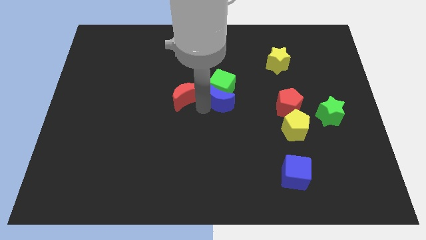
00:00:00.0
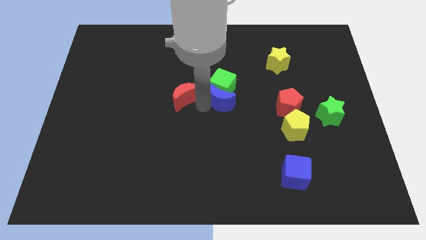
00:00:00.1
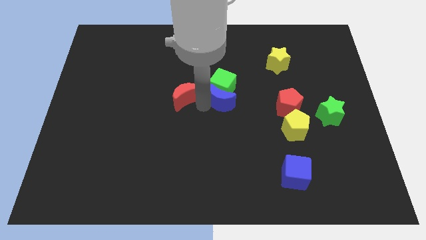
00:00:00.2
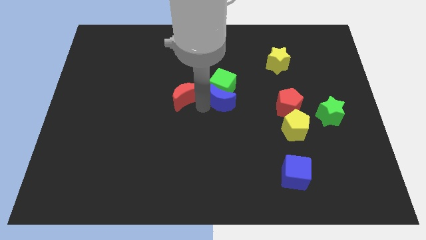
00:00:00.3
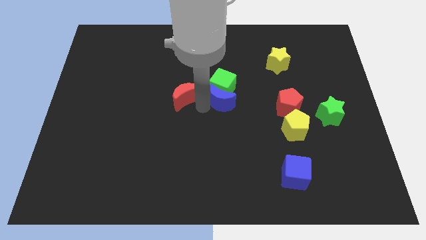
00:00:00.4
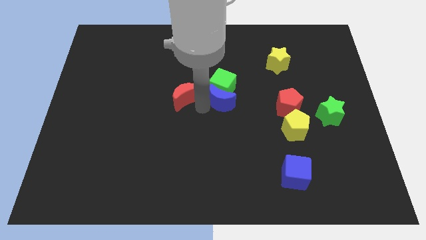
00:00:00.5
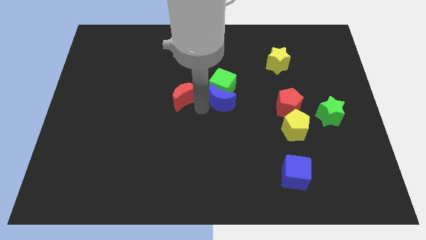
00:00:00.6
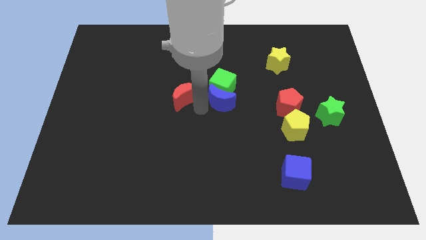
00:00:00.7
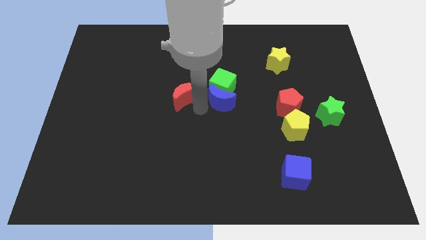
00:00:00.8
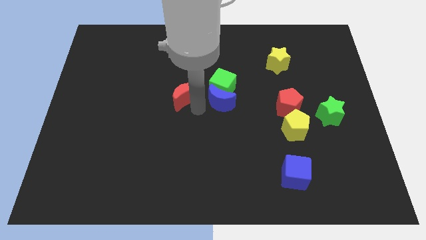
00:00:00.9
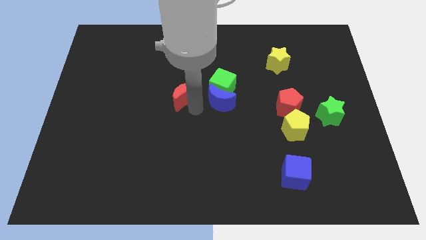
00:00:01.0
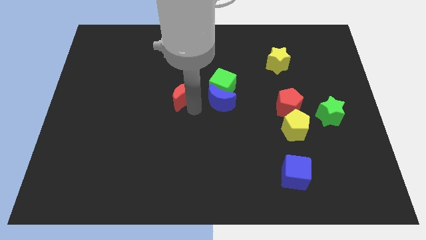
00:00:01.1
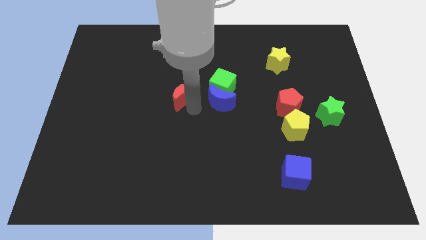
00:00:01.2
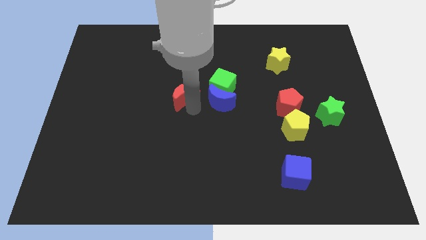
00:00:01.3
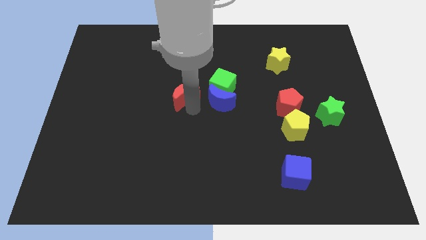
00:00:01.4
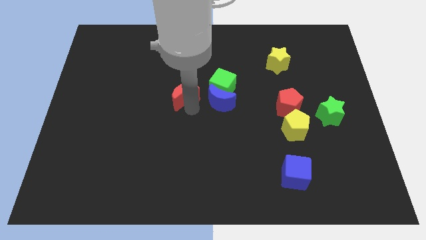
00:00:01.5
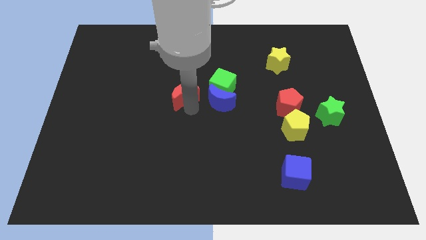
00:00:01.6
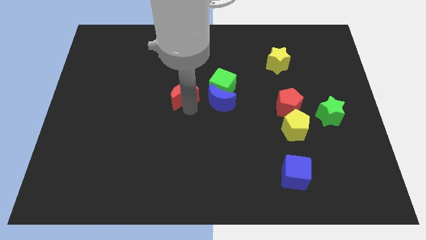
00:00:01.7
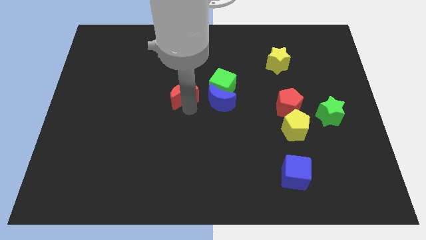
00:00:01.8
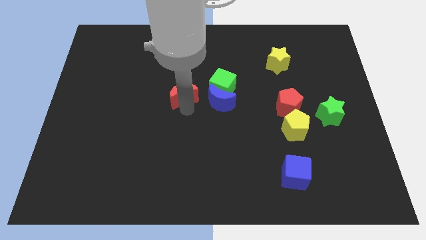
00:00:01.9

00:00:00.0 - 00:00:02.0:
separate the red moon from a group of blocks

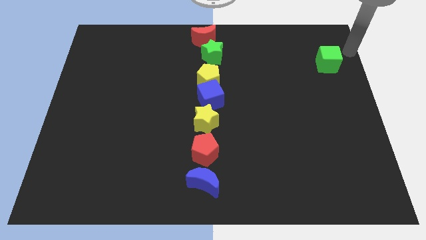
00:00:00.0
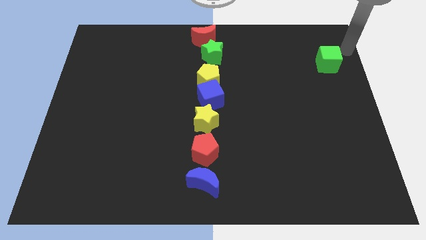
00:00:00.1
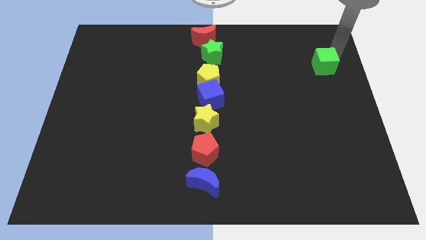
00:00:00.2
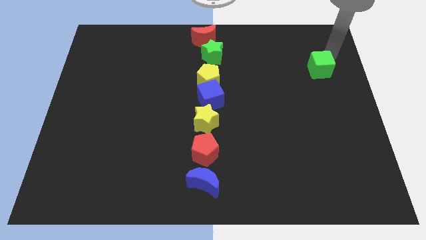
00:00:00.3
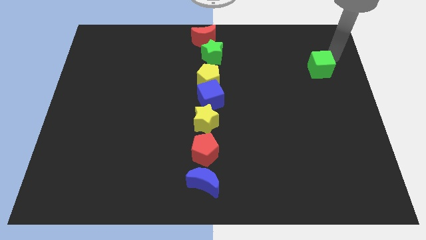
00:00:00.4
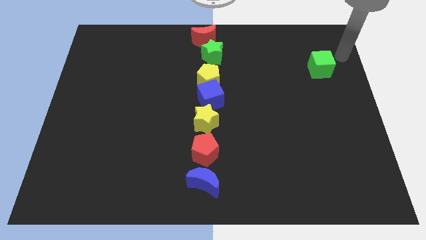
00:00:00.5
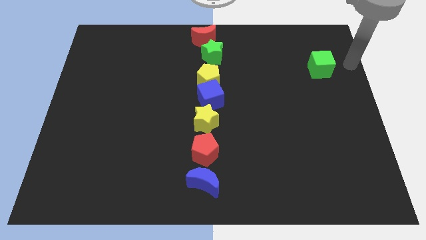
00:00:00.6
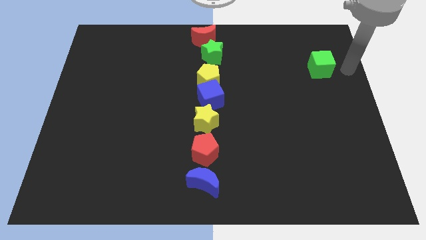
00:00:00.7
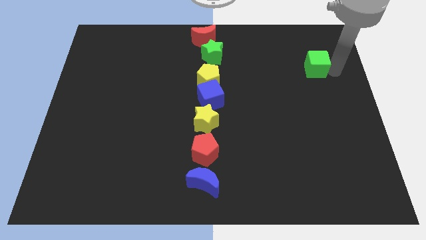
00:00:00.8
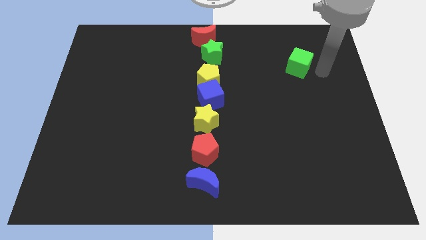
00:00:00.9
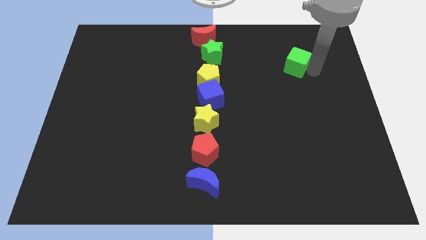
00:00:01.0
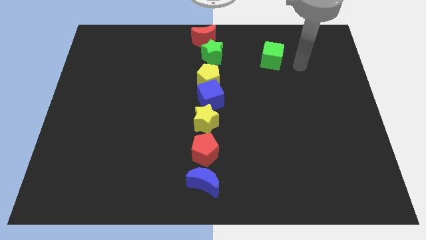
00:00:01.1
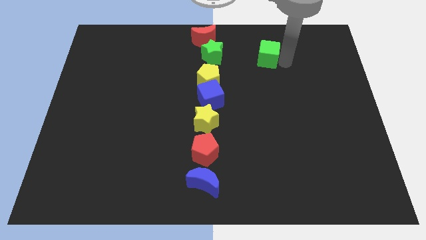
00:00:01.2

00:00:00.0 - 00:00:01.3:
push the green cube towards left

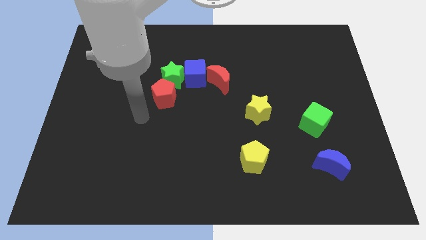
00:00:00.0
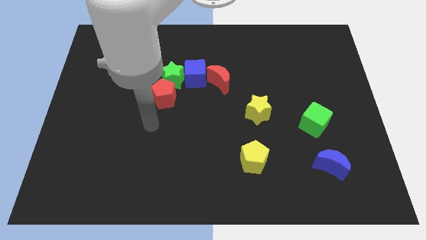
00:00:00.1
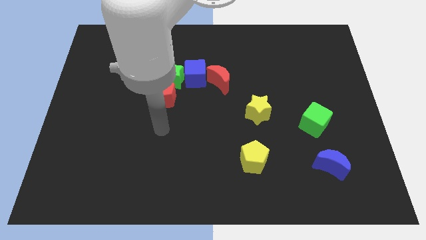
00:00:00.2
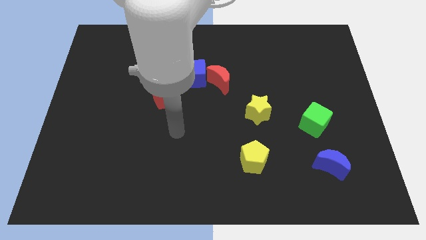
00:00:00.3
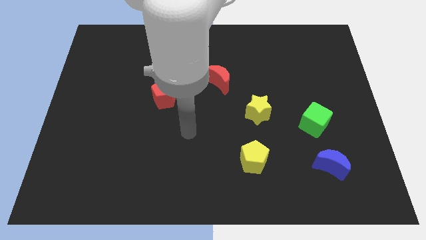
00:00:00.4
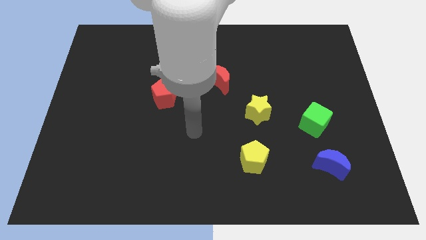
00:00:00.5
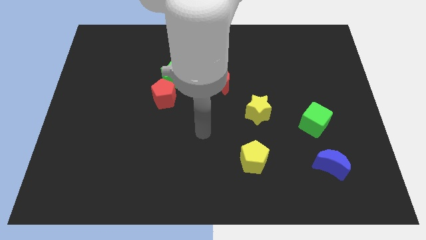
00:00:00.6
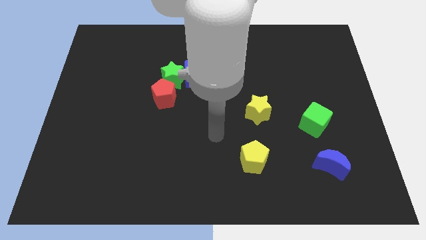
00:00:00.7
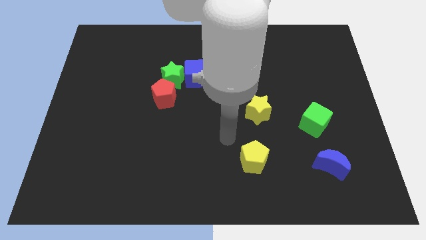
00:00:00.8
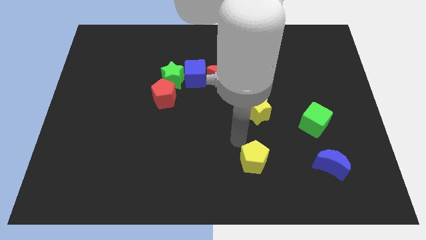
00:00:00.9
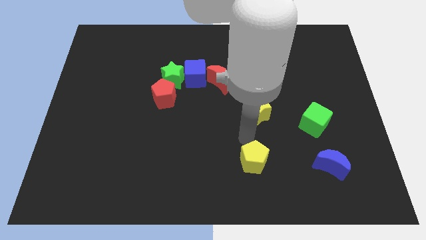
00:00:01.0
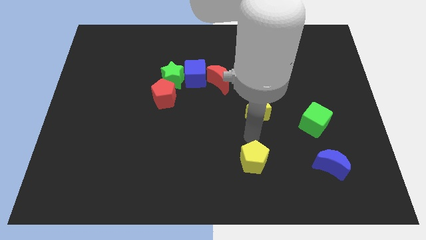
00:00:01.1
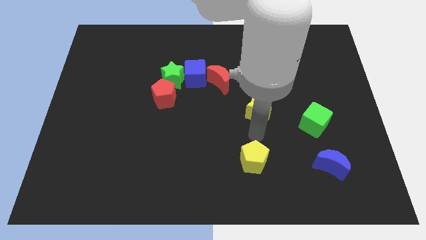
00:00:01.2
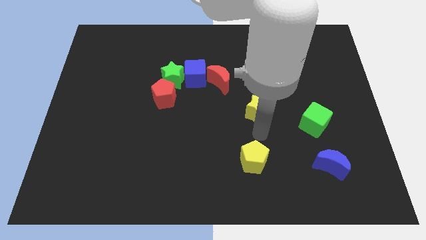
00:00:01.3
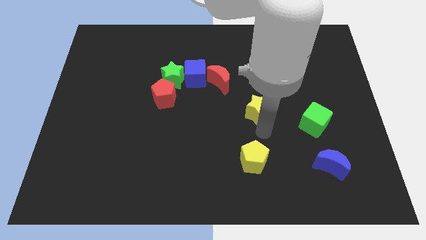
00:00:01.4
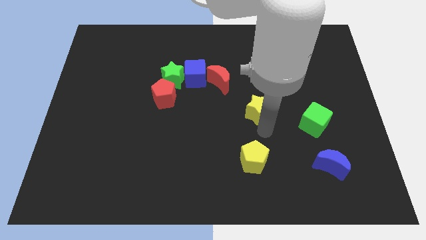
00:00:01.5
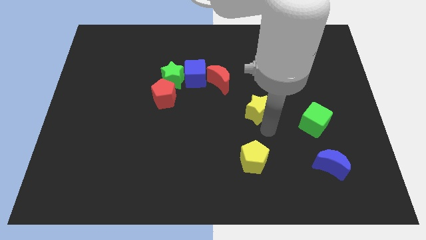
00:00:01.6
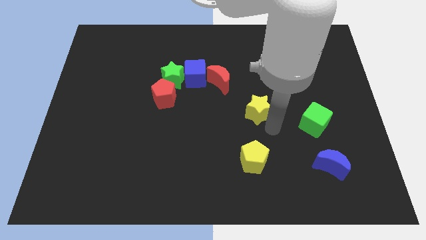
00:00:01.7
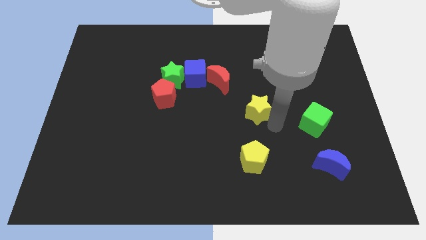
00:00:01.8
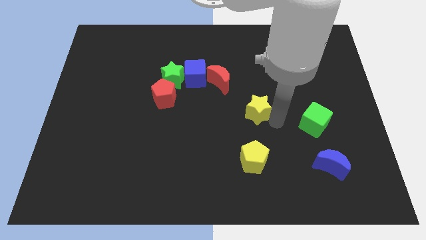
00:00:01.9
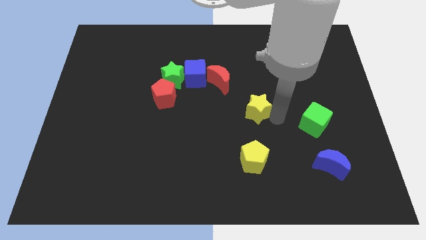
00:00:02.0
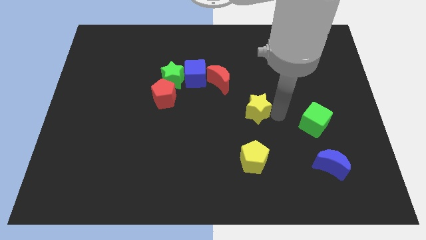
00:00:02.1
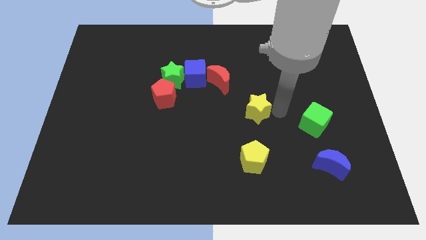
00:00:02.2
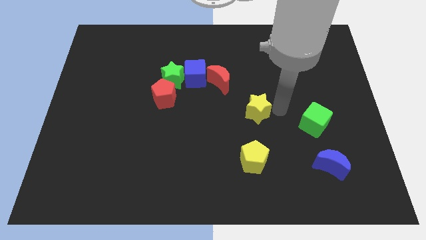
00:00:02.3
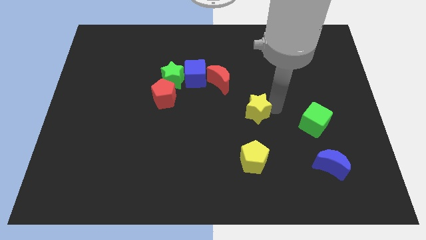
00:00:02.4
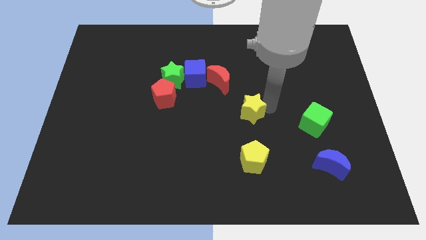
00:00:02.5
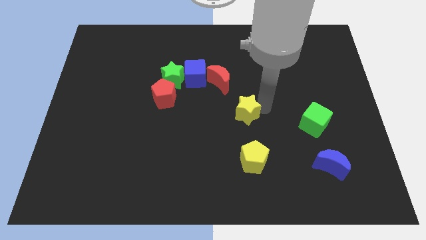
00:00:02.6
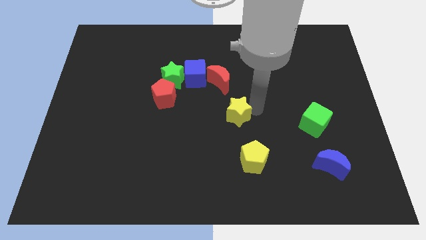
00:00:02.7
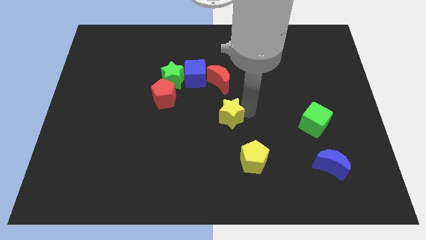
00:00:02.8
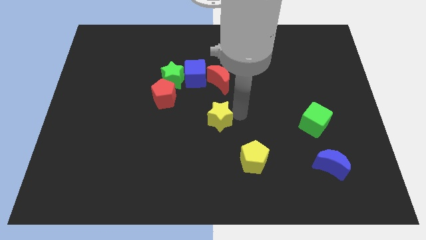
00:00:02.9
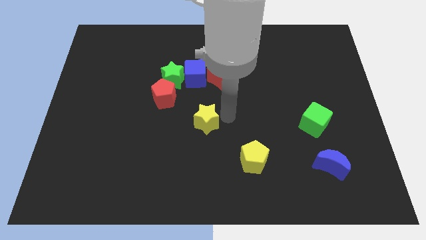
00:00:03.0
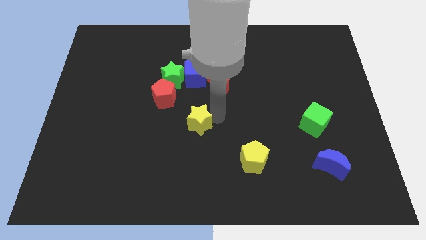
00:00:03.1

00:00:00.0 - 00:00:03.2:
move the yellow star vertically below to the blue cube

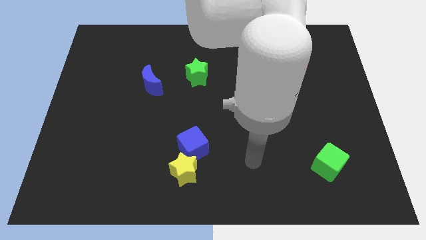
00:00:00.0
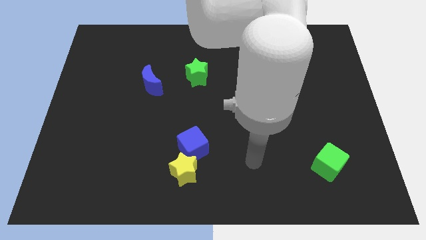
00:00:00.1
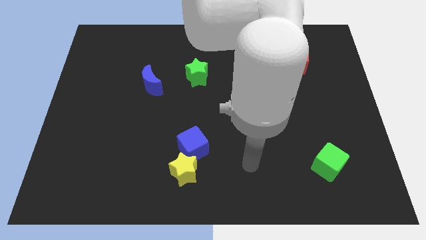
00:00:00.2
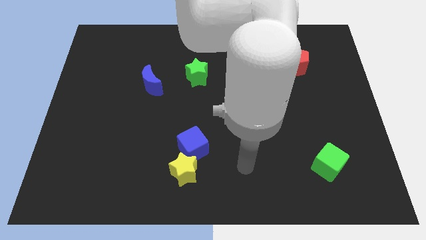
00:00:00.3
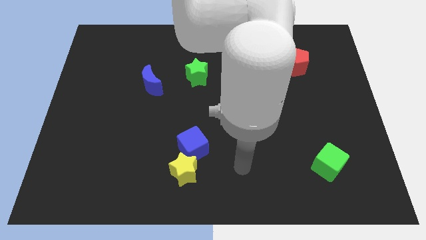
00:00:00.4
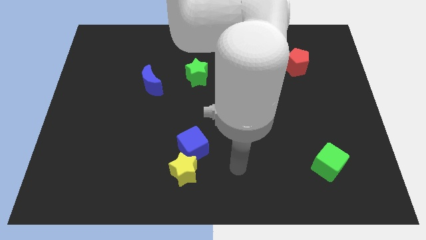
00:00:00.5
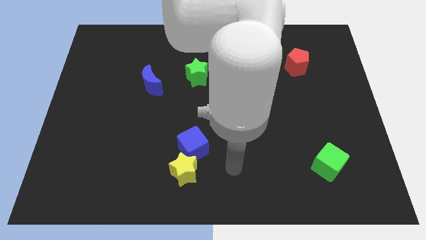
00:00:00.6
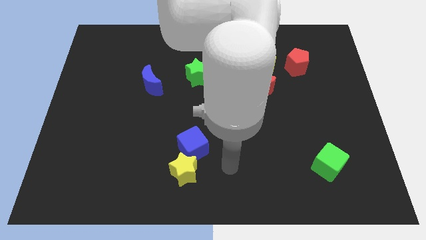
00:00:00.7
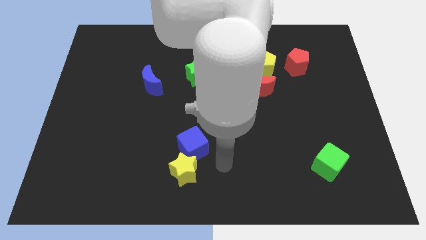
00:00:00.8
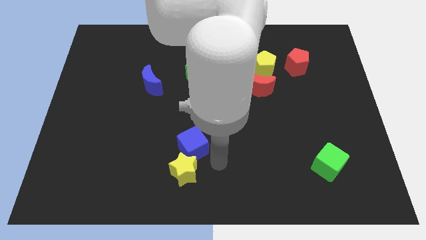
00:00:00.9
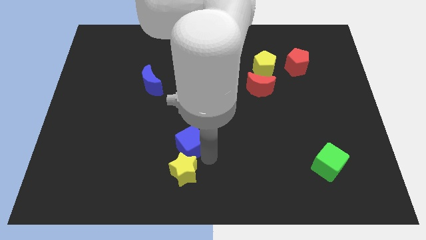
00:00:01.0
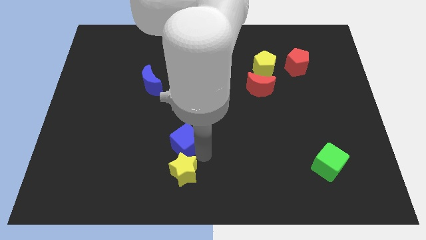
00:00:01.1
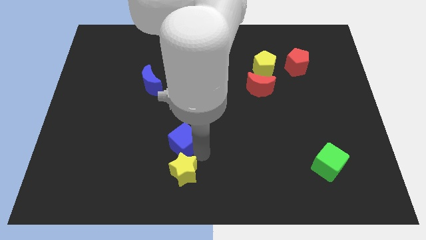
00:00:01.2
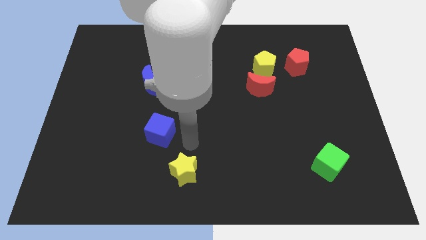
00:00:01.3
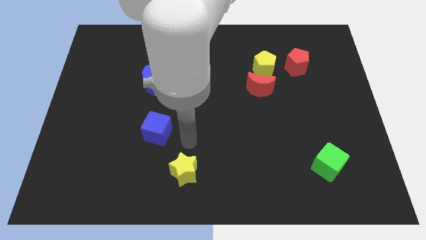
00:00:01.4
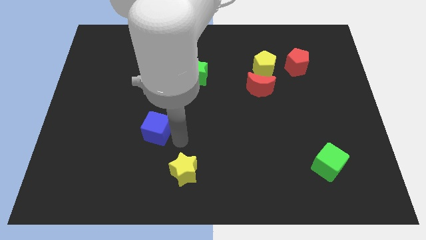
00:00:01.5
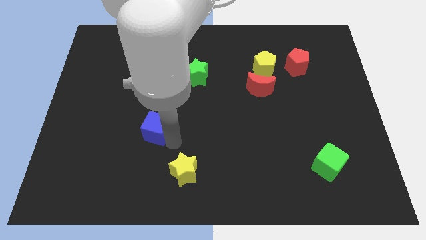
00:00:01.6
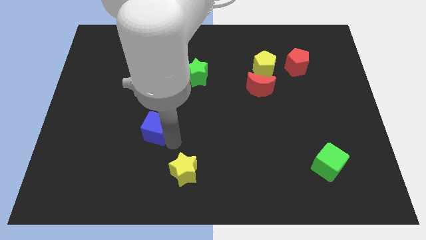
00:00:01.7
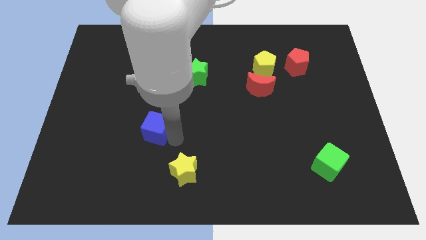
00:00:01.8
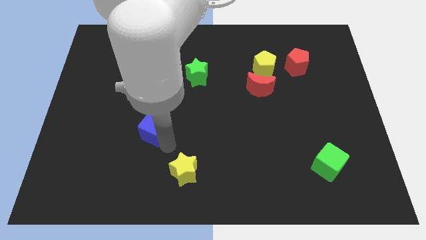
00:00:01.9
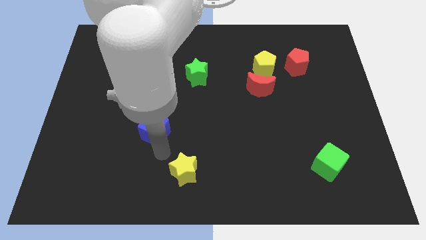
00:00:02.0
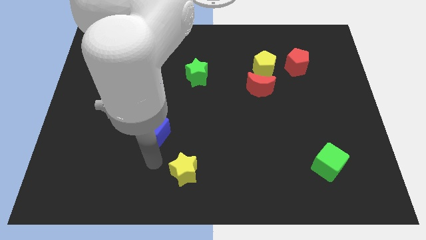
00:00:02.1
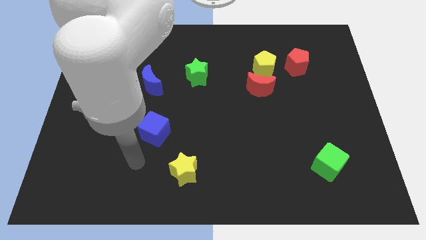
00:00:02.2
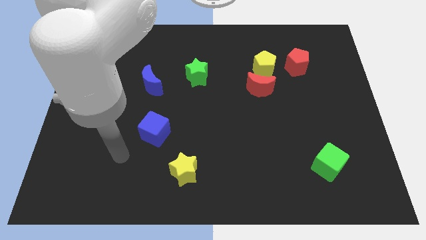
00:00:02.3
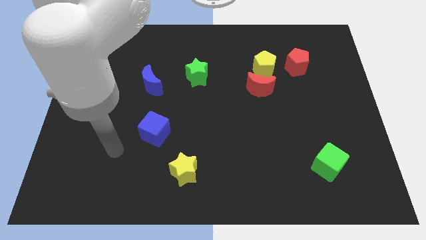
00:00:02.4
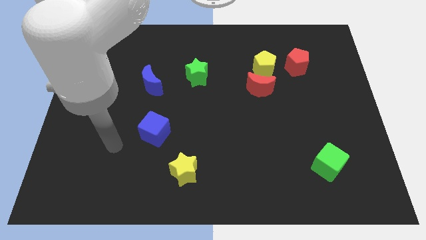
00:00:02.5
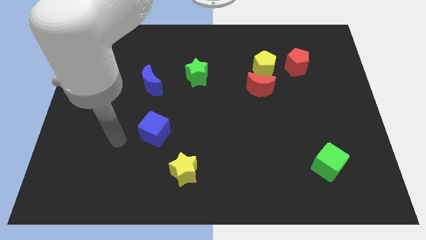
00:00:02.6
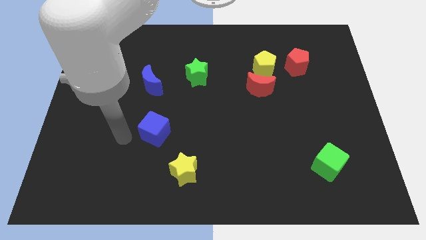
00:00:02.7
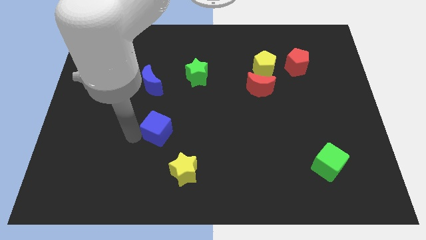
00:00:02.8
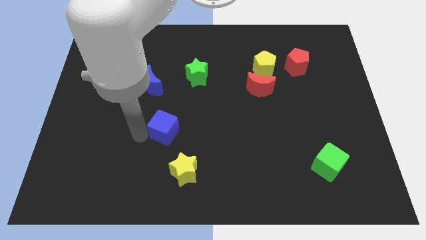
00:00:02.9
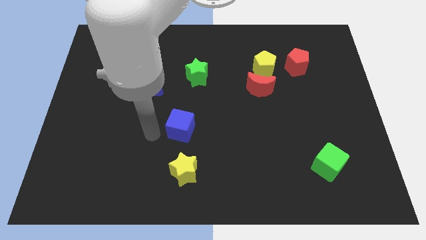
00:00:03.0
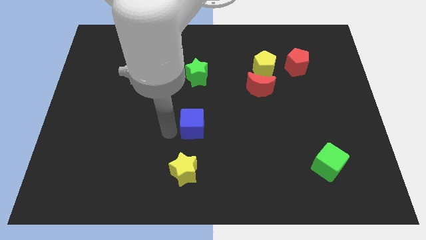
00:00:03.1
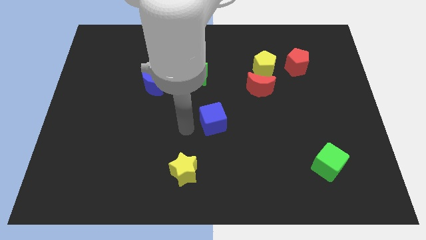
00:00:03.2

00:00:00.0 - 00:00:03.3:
place the blue cube to the center of the board
